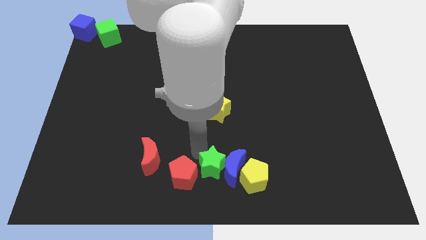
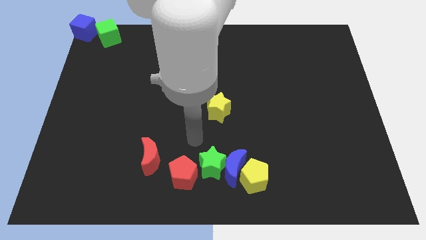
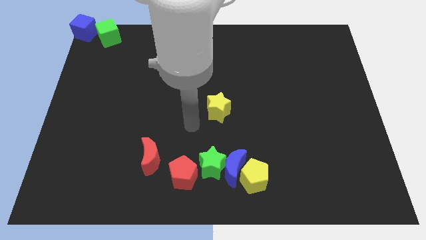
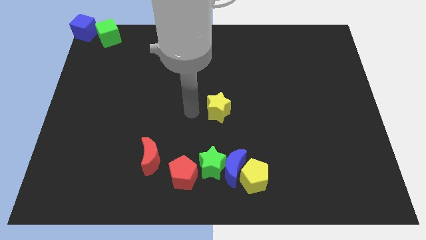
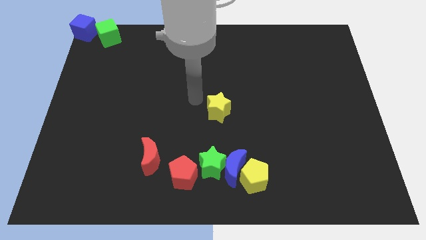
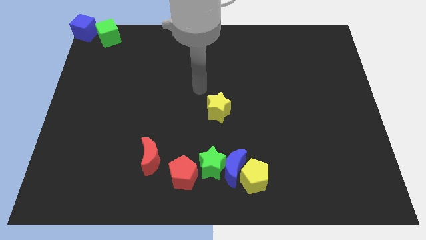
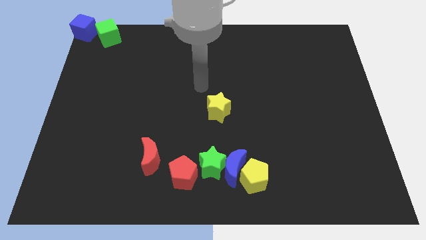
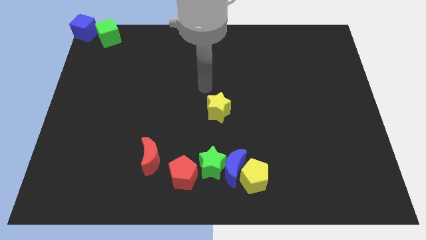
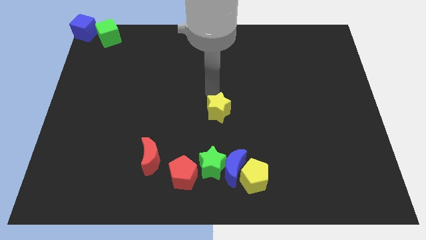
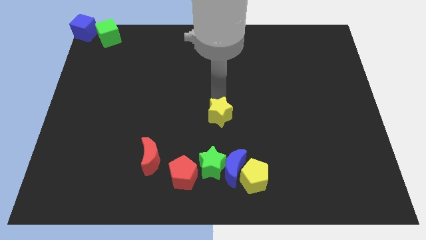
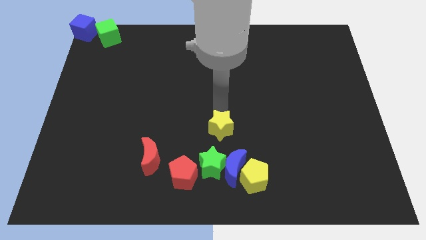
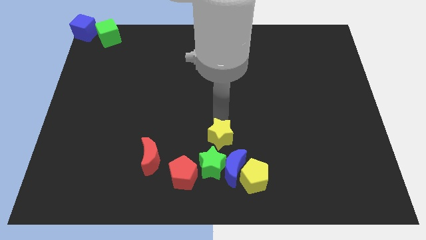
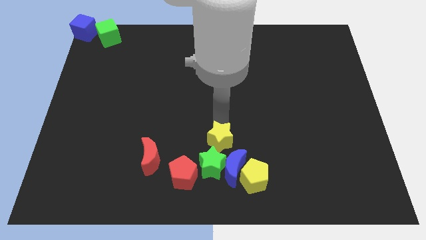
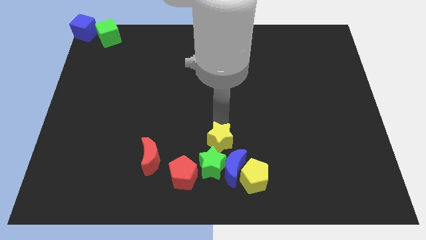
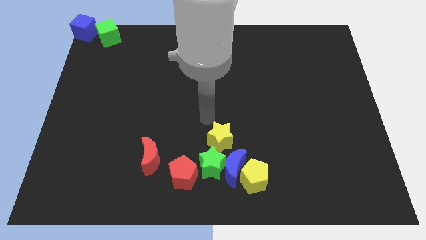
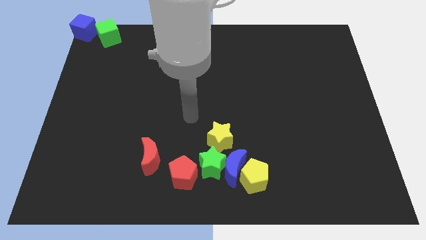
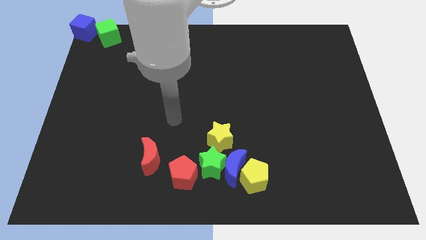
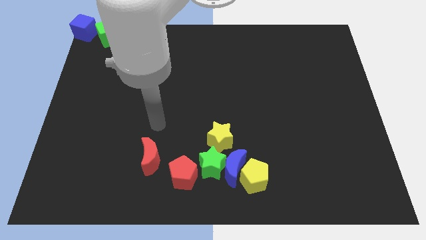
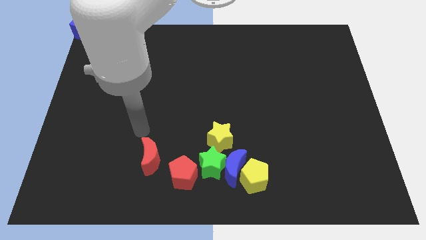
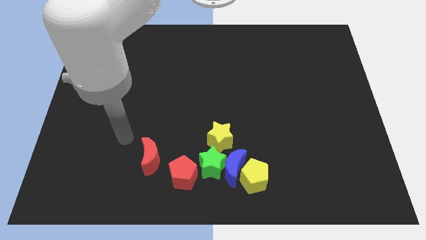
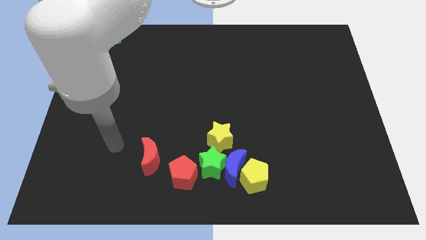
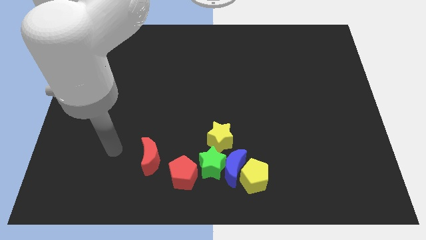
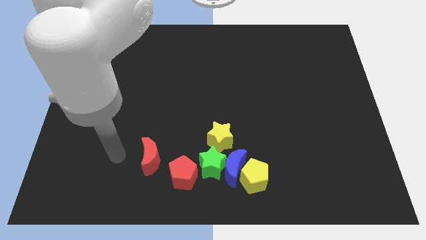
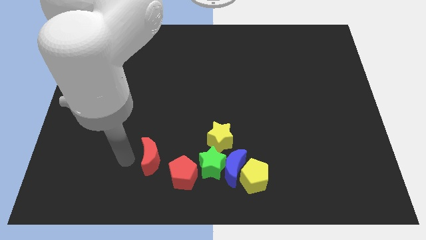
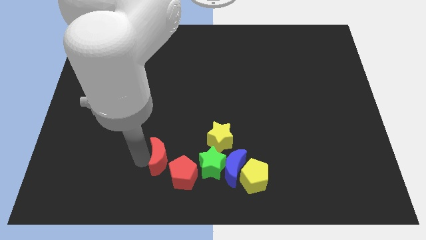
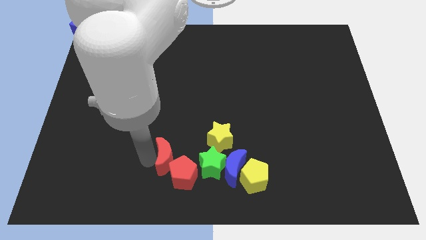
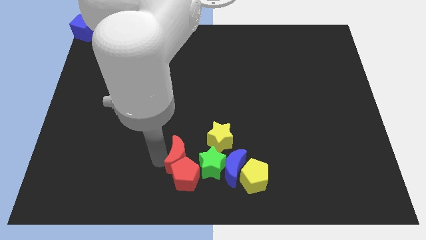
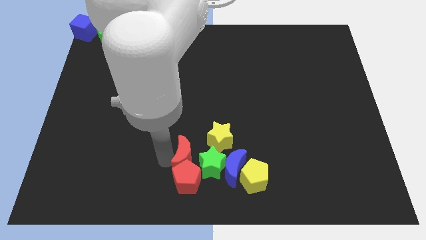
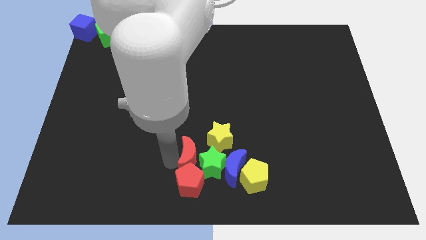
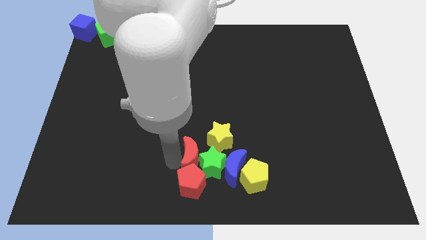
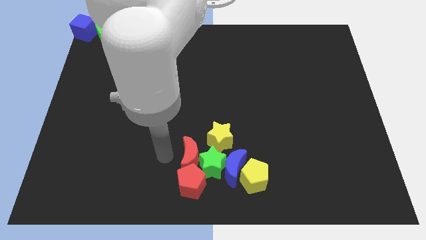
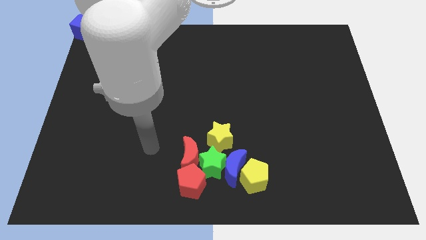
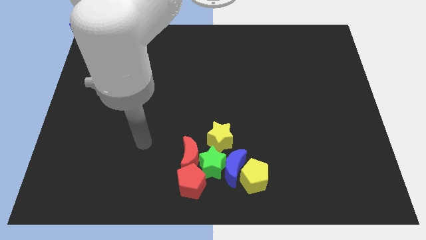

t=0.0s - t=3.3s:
move the yellow star and red blocks into the group of blocks at the bottom side of the table

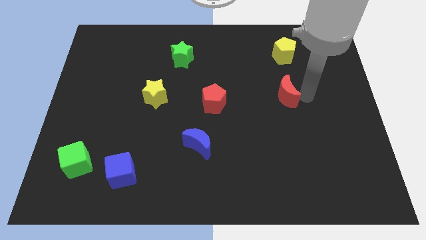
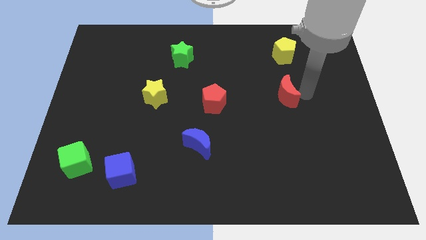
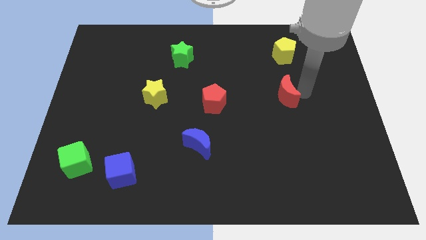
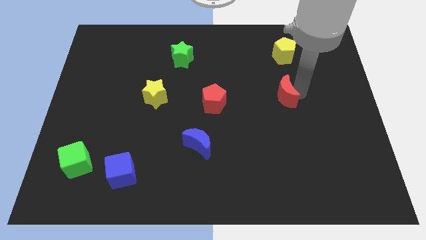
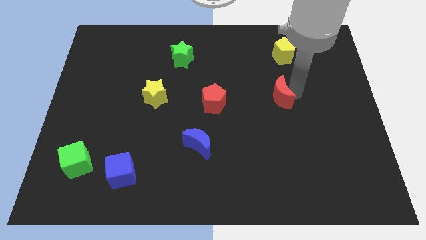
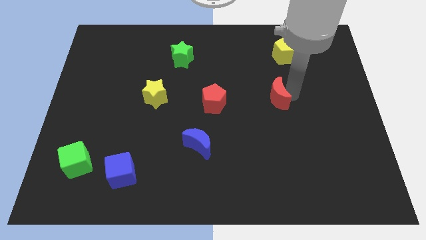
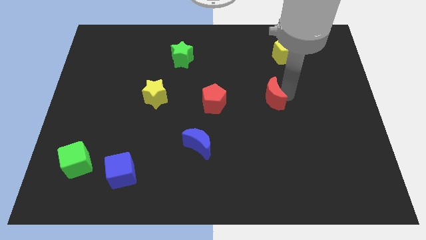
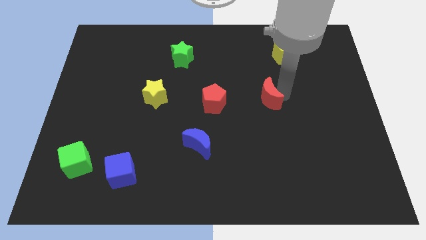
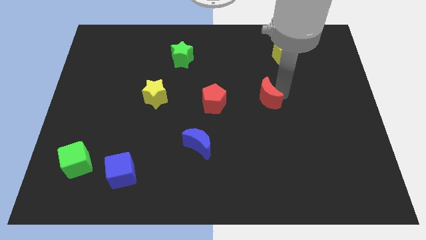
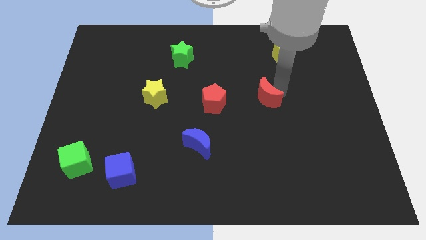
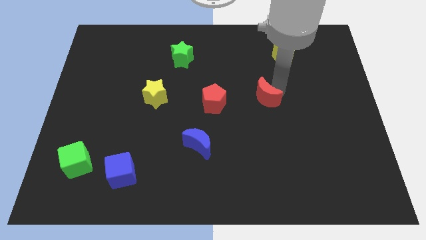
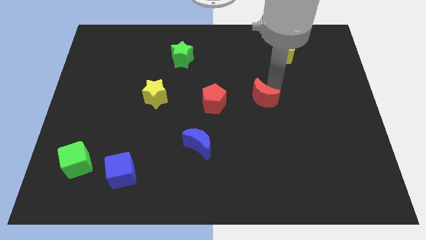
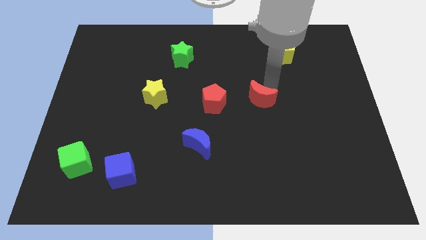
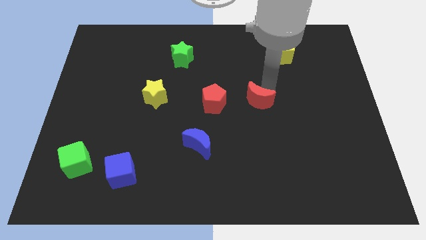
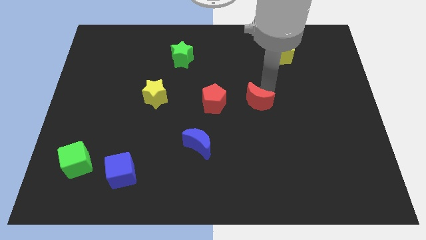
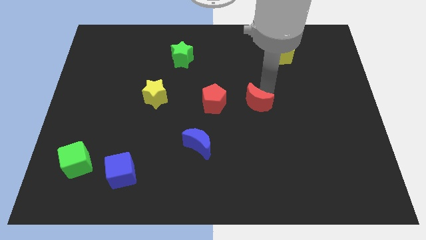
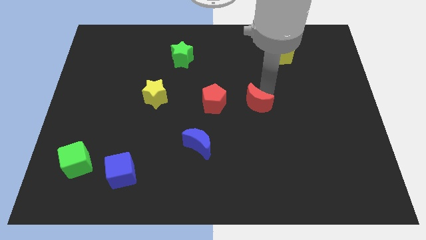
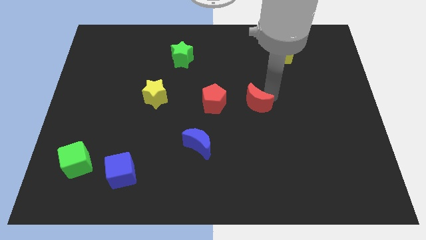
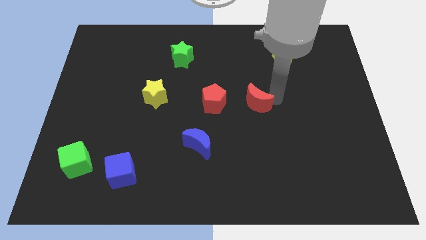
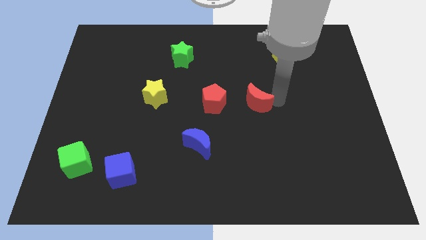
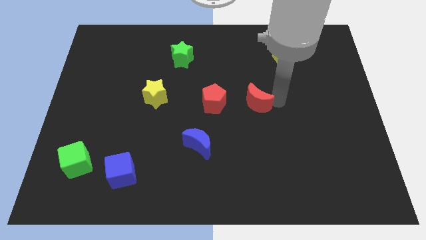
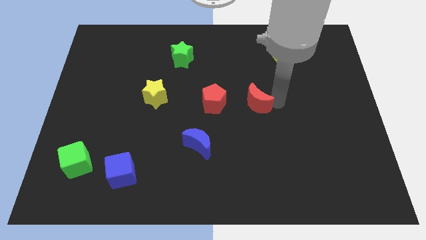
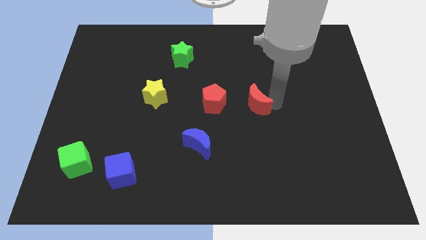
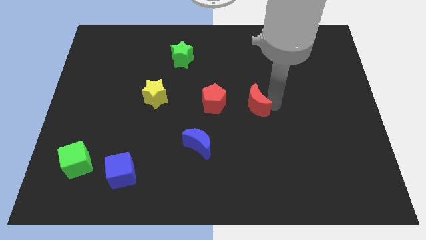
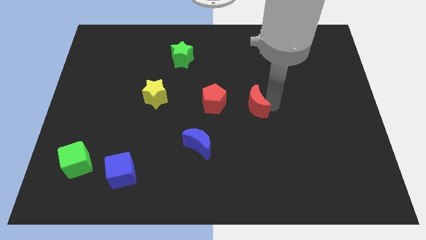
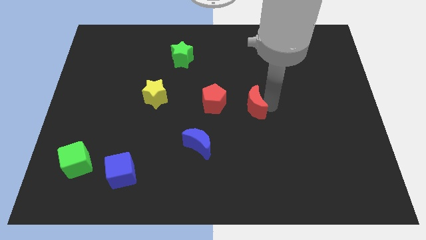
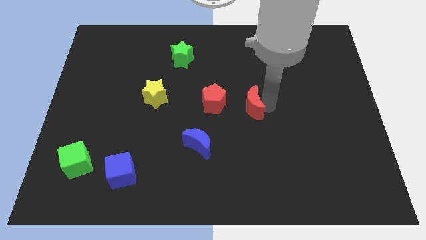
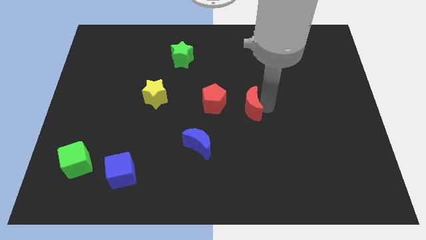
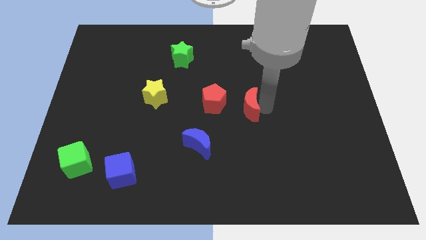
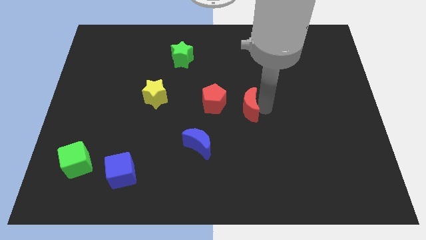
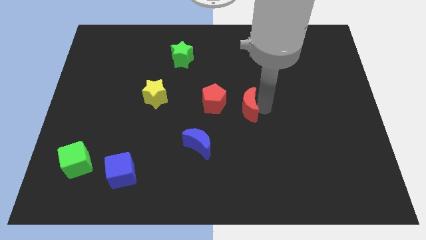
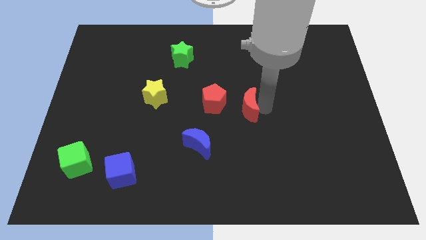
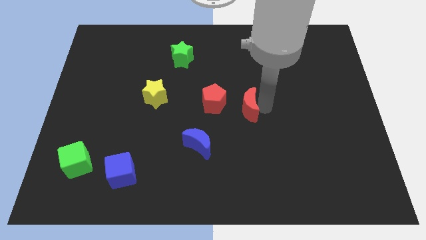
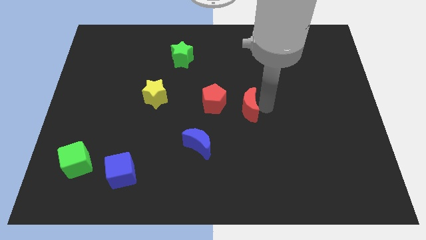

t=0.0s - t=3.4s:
move the red crescent right to the red pentagon

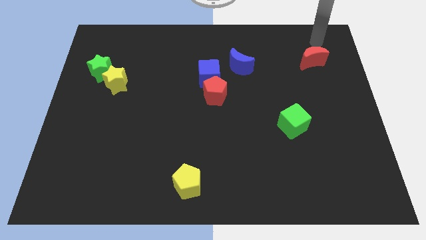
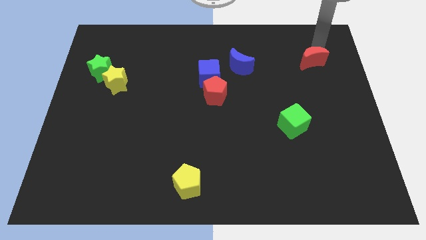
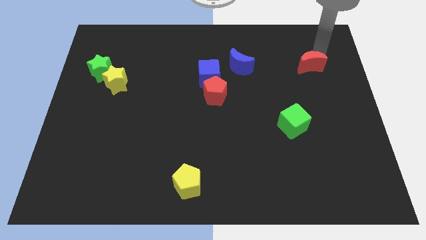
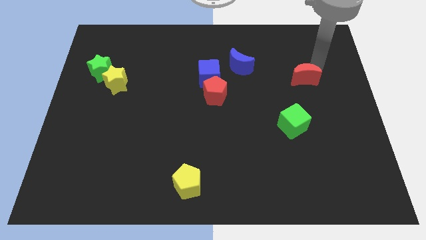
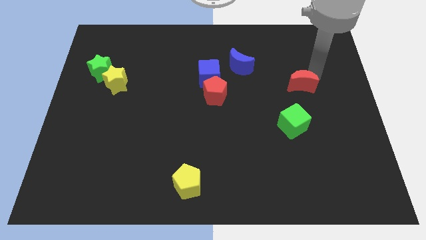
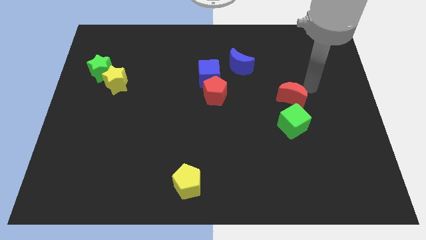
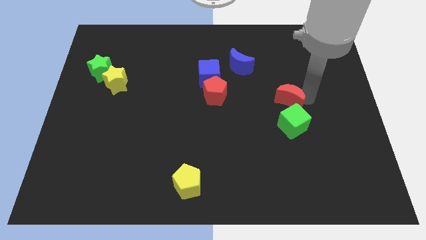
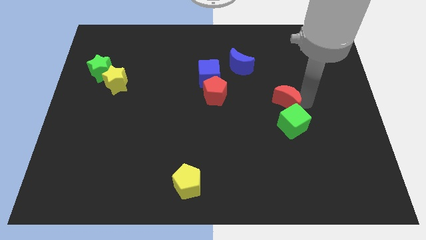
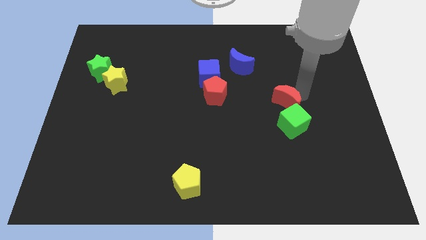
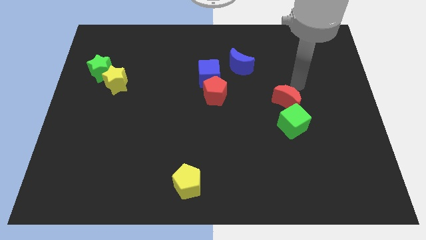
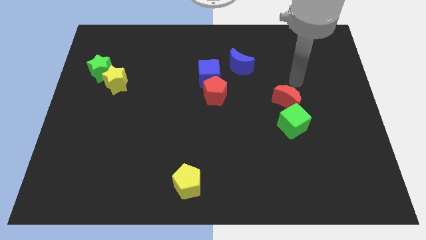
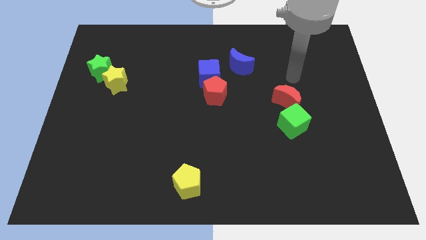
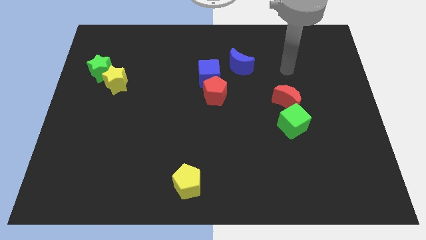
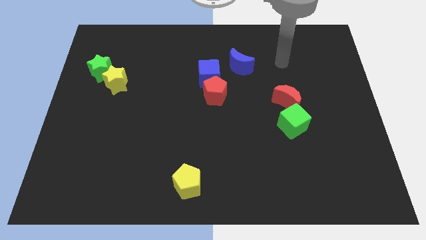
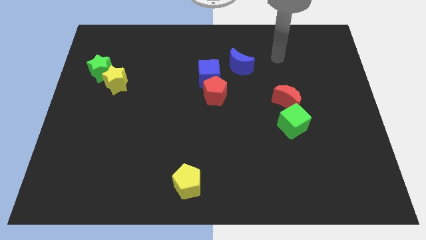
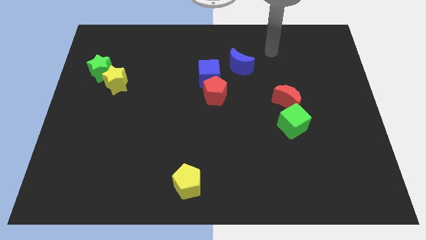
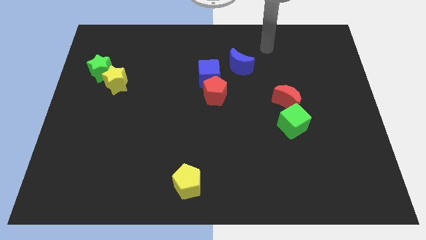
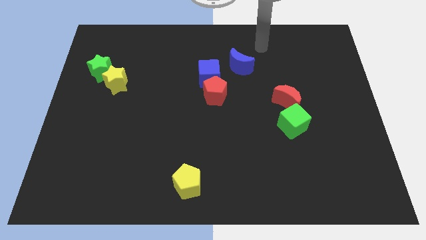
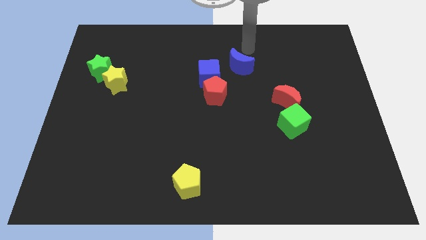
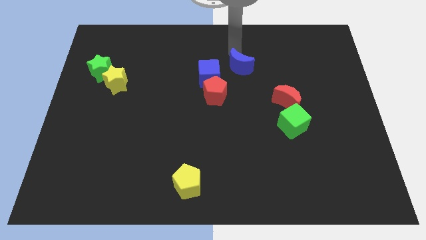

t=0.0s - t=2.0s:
push the red moon towards green cube

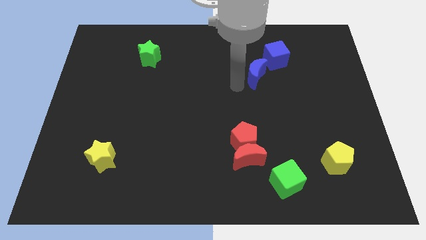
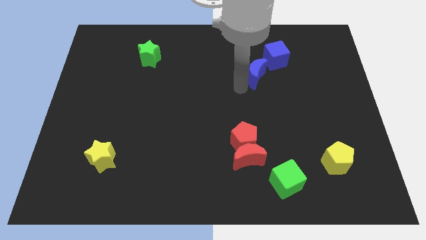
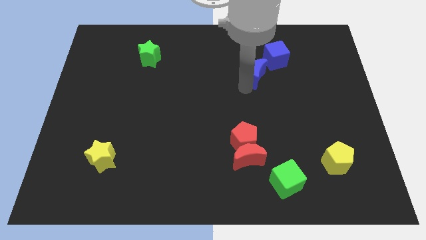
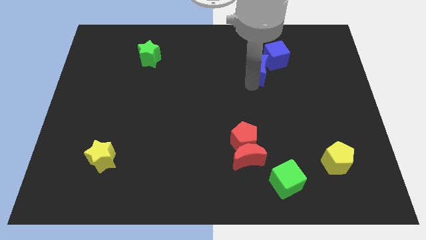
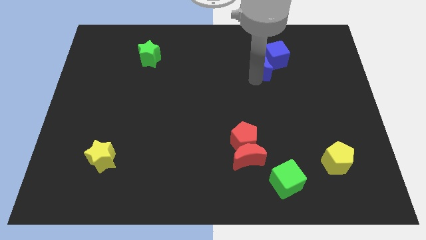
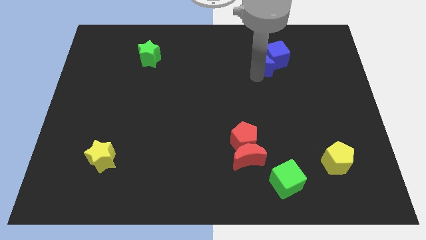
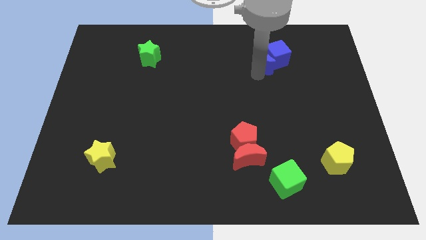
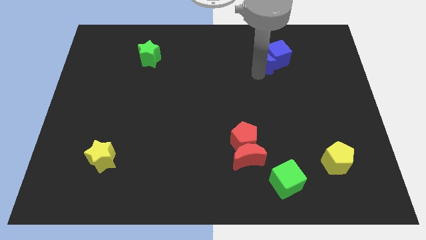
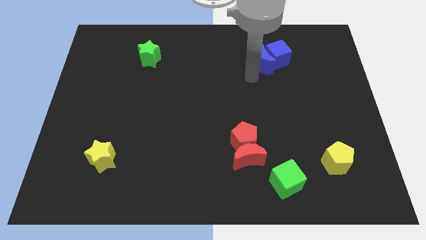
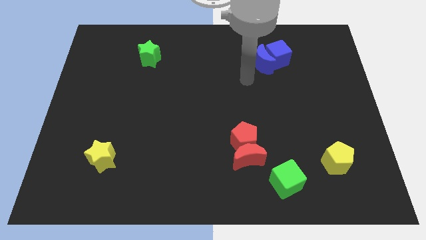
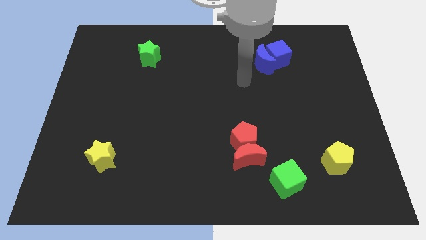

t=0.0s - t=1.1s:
push the blue crescent into the blue cube
